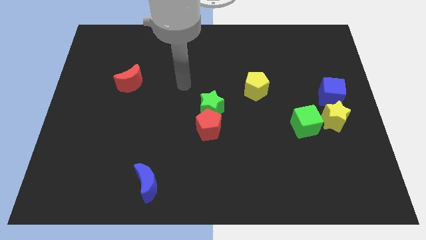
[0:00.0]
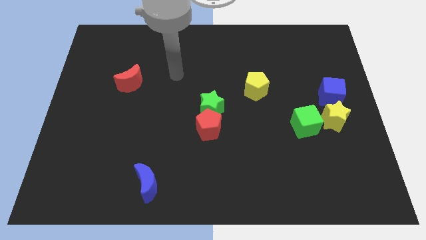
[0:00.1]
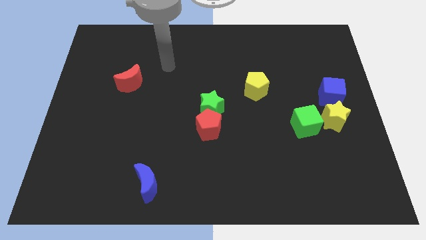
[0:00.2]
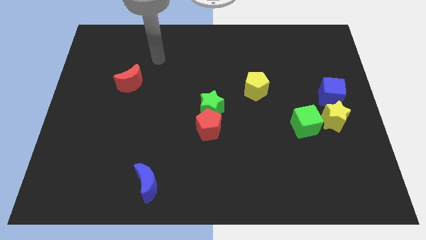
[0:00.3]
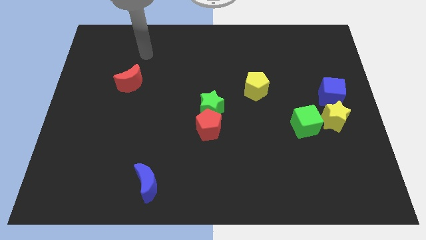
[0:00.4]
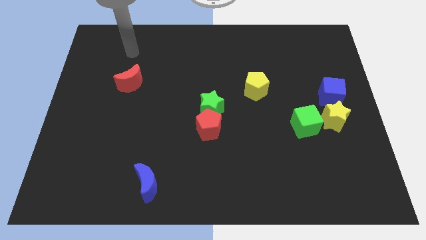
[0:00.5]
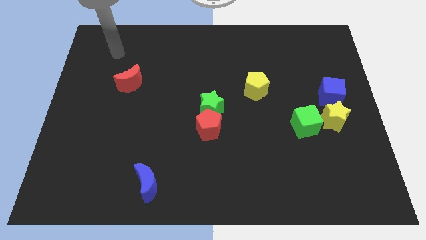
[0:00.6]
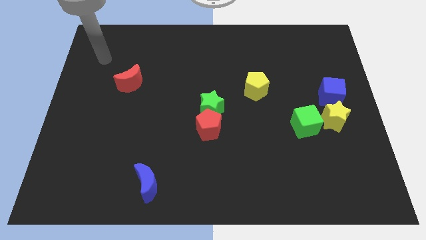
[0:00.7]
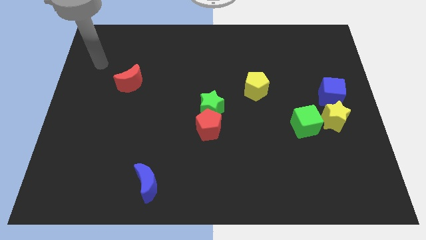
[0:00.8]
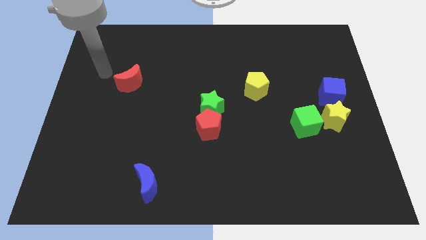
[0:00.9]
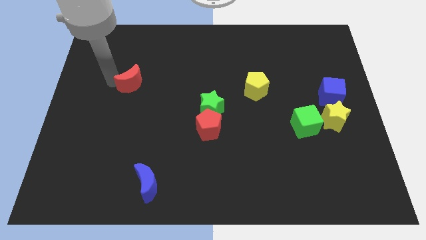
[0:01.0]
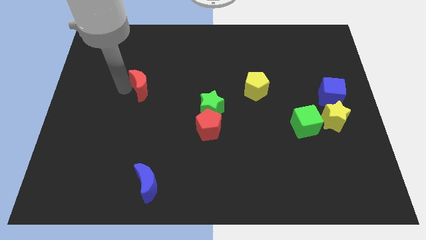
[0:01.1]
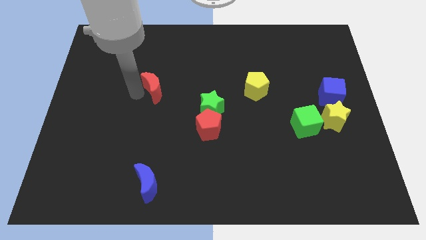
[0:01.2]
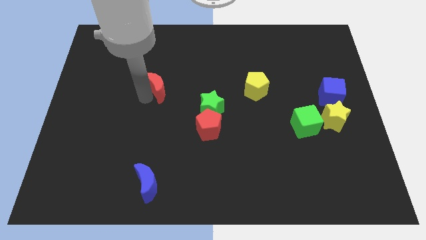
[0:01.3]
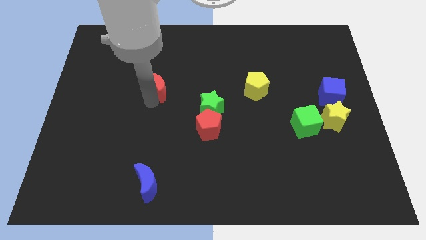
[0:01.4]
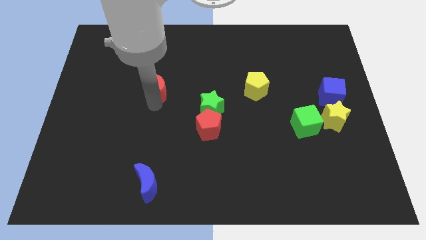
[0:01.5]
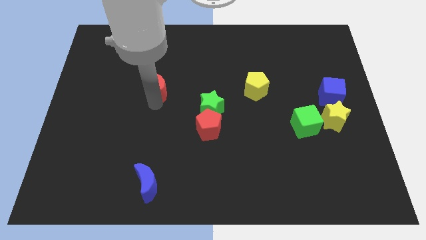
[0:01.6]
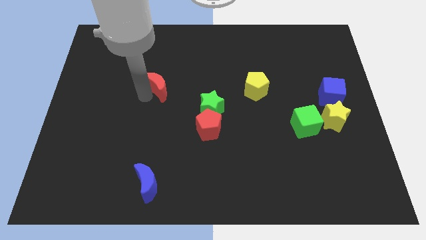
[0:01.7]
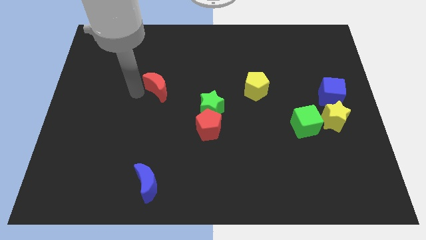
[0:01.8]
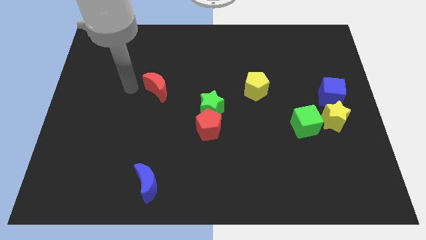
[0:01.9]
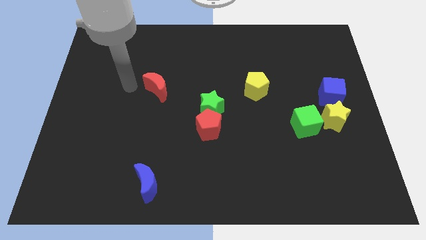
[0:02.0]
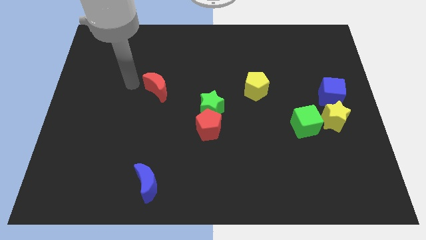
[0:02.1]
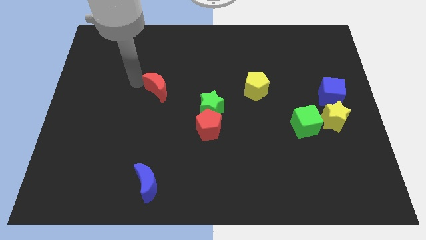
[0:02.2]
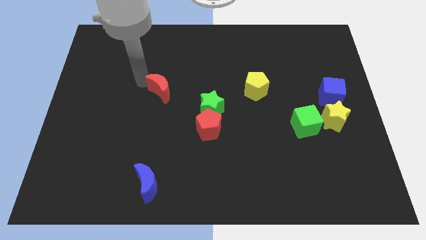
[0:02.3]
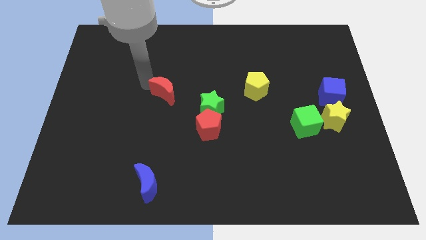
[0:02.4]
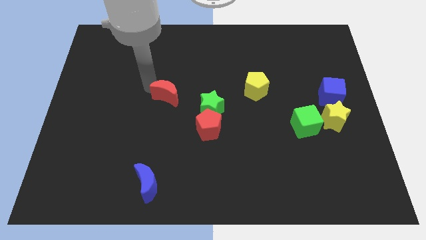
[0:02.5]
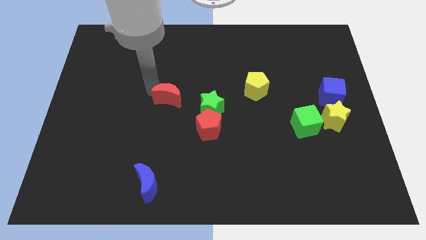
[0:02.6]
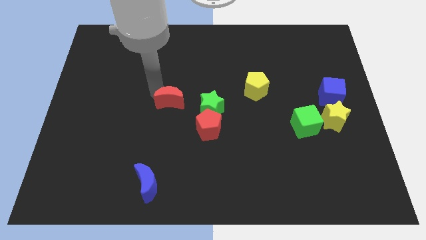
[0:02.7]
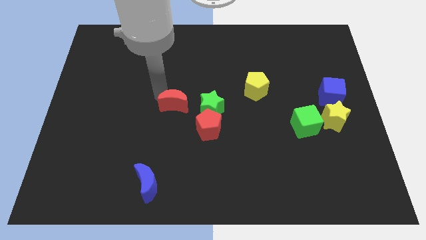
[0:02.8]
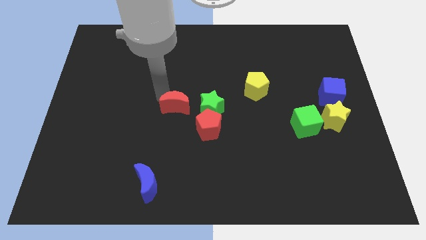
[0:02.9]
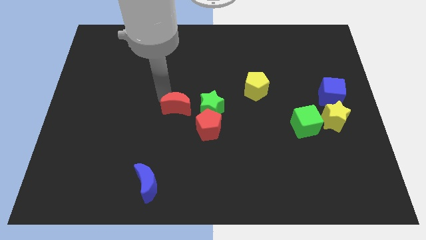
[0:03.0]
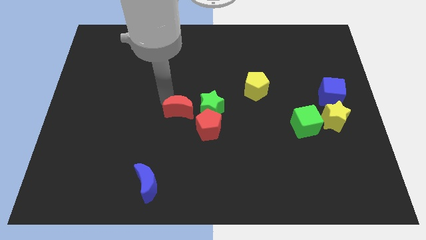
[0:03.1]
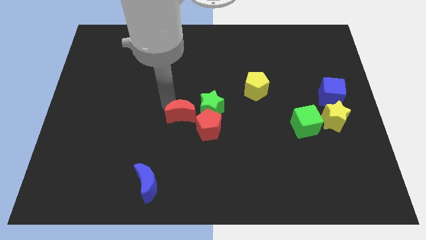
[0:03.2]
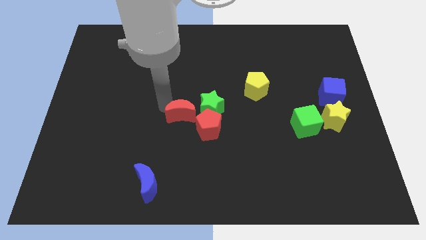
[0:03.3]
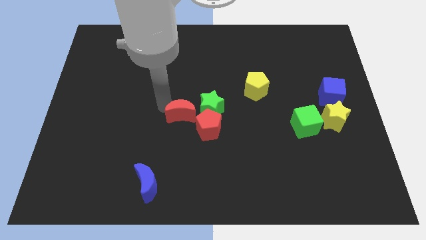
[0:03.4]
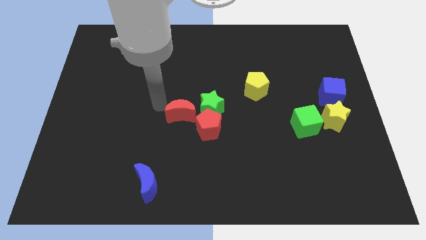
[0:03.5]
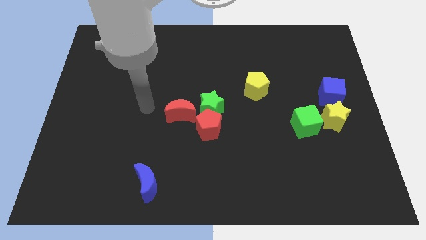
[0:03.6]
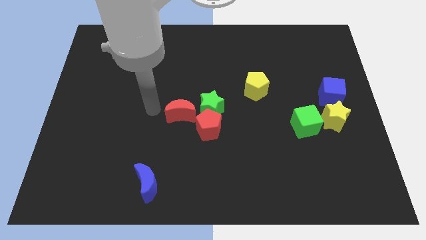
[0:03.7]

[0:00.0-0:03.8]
push the red crescent to the right of the green star

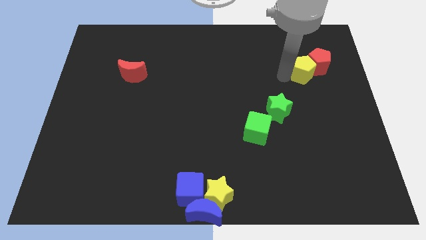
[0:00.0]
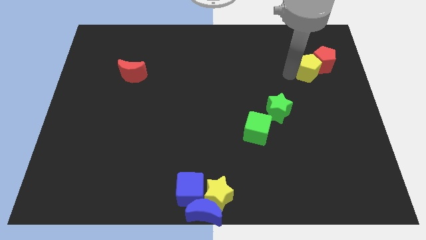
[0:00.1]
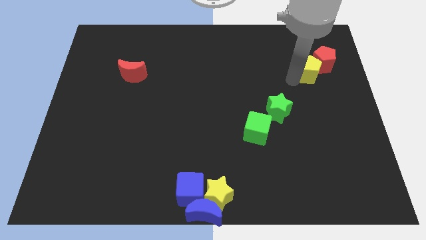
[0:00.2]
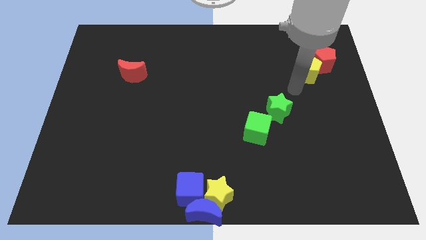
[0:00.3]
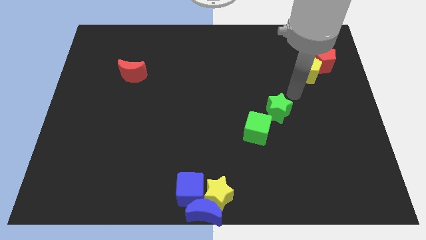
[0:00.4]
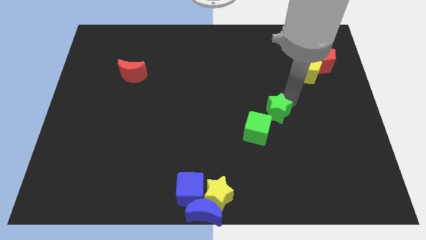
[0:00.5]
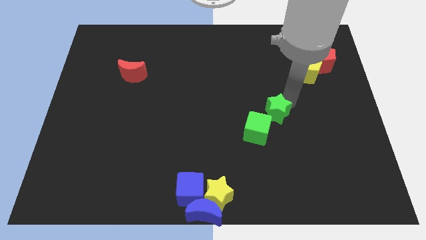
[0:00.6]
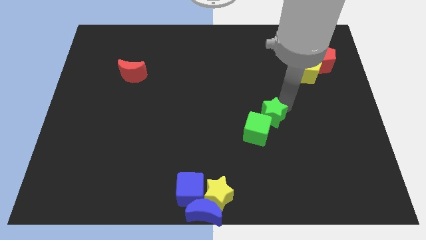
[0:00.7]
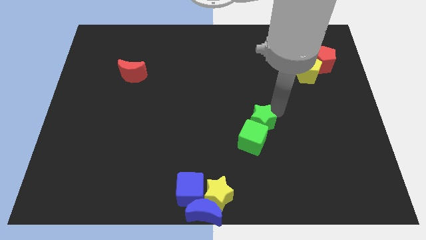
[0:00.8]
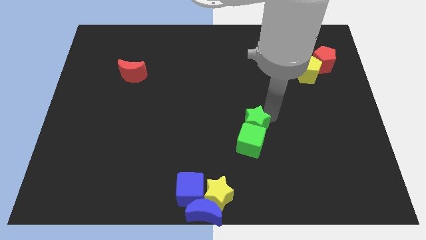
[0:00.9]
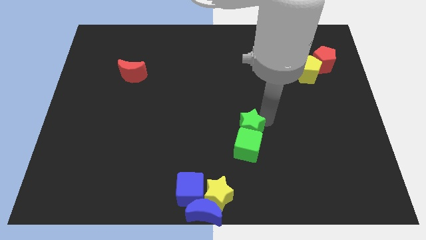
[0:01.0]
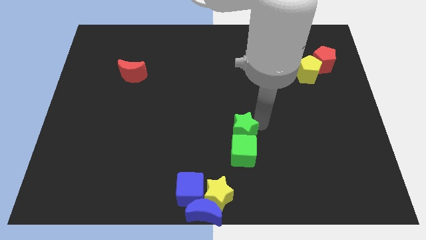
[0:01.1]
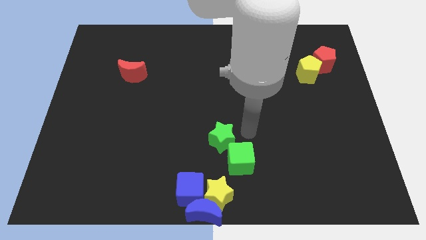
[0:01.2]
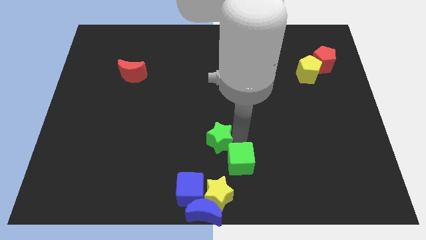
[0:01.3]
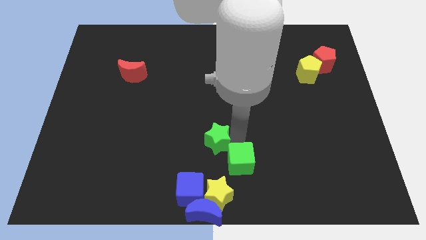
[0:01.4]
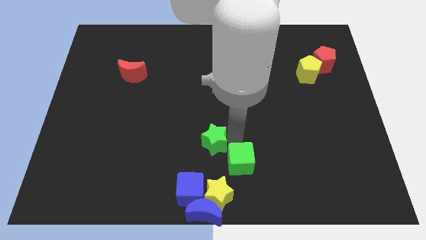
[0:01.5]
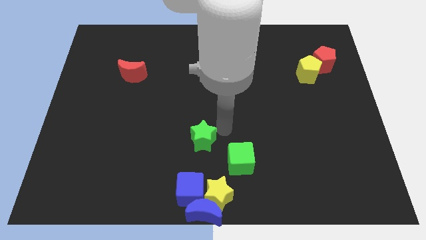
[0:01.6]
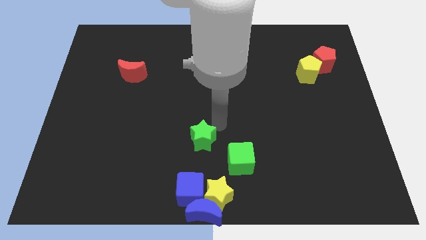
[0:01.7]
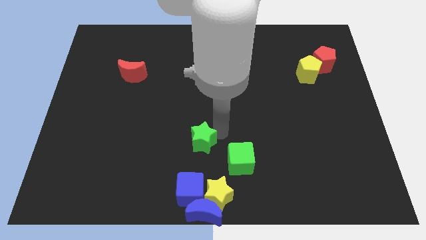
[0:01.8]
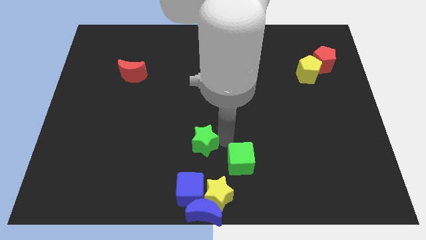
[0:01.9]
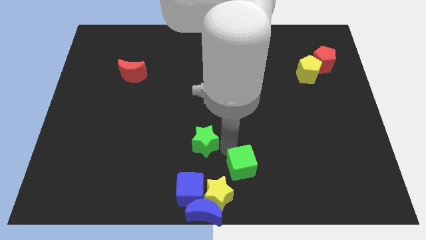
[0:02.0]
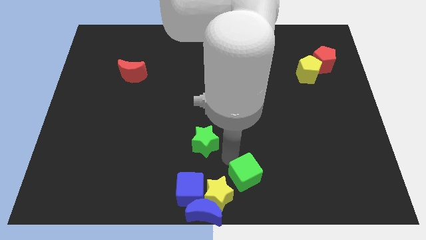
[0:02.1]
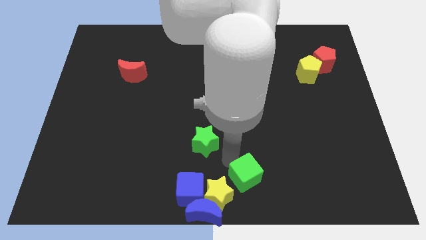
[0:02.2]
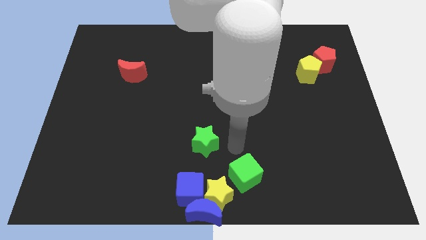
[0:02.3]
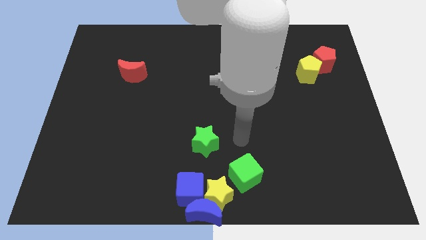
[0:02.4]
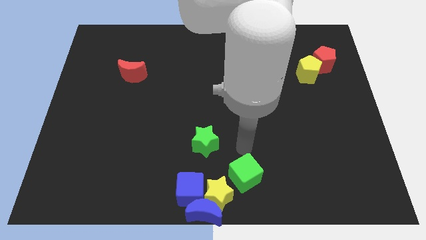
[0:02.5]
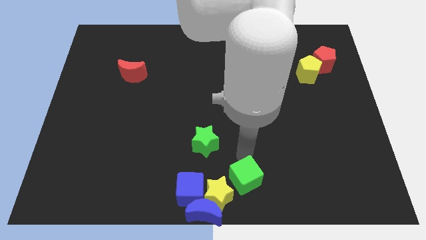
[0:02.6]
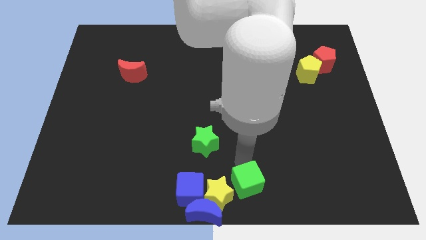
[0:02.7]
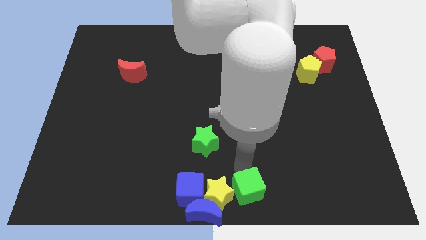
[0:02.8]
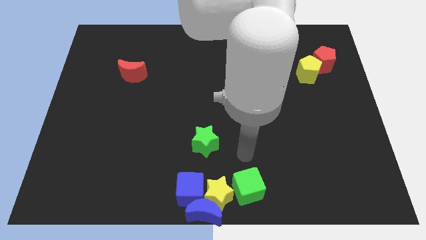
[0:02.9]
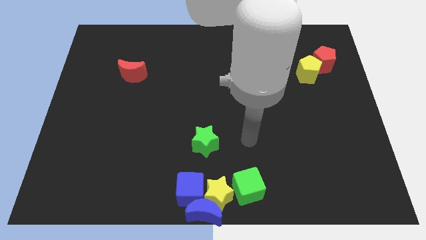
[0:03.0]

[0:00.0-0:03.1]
push the green cube at the right side of the yellow star

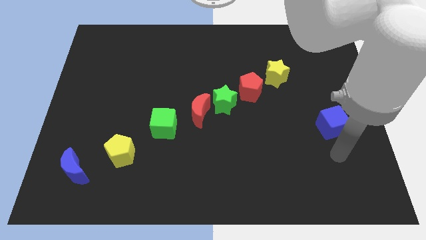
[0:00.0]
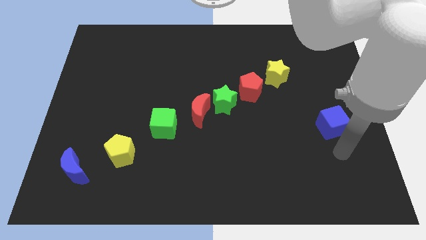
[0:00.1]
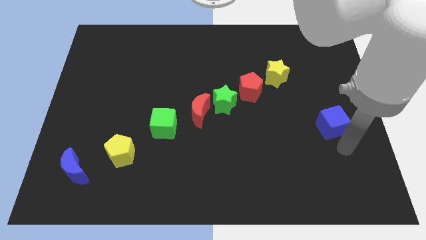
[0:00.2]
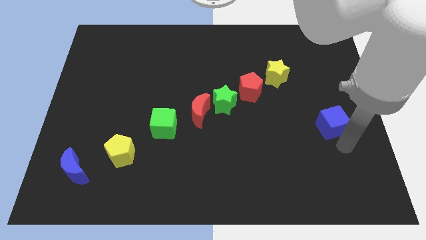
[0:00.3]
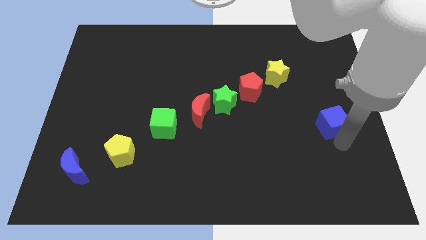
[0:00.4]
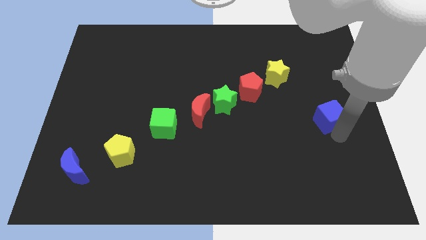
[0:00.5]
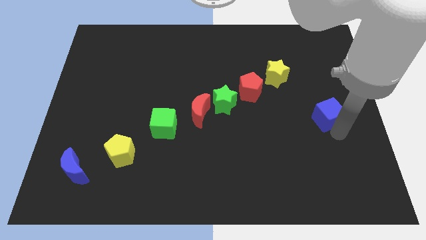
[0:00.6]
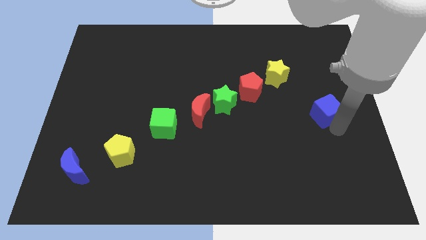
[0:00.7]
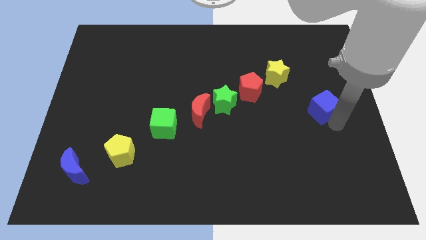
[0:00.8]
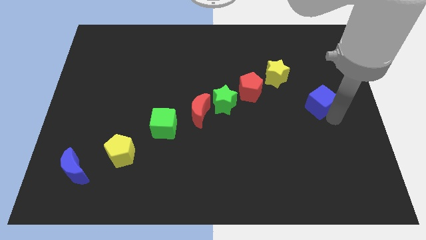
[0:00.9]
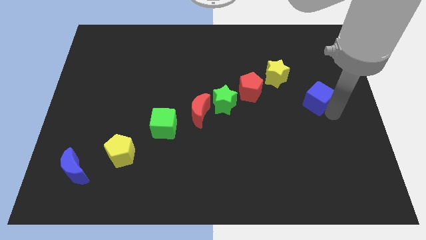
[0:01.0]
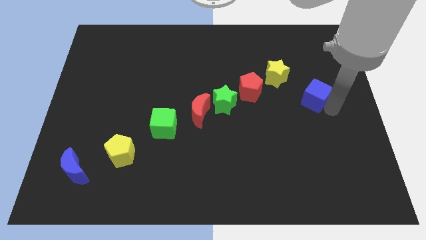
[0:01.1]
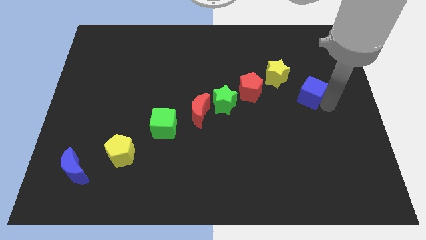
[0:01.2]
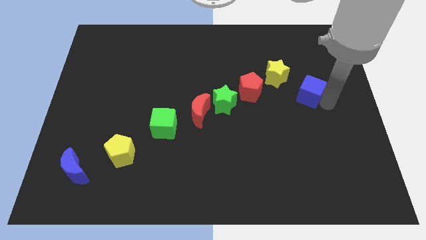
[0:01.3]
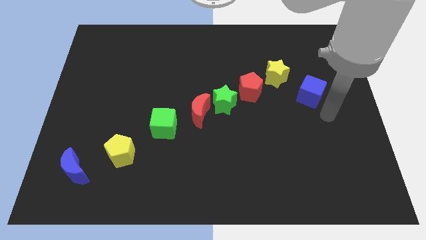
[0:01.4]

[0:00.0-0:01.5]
move the blue cube diagonally to the right of the yellow star

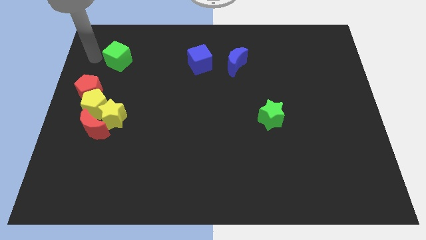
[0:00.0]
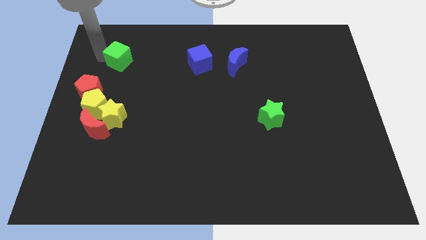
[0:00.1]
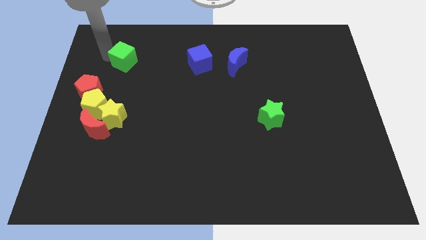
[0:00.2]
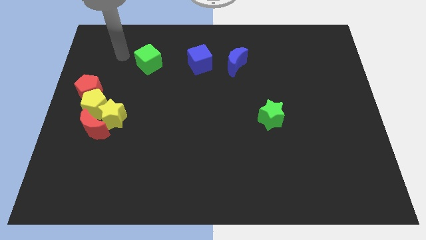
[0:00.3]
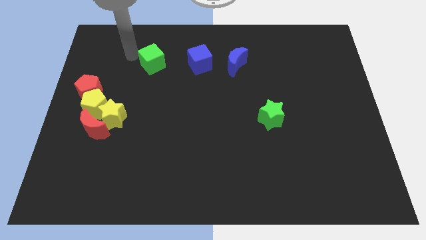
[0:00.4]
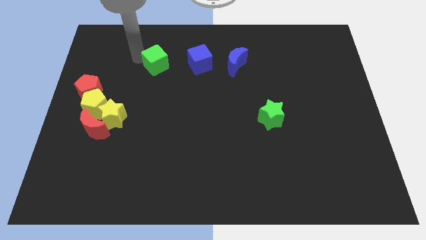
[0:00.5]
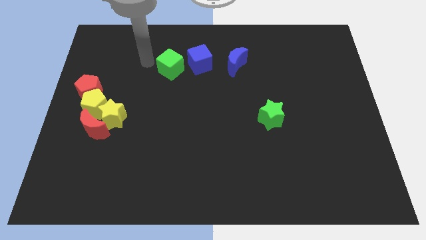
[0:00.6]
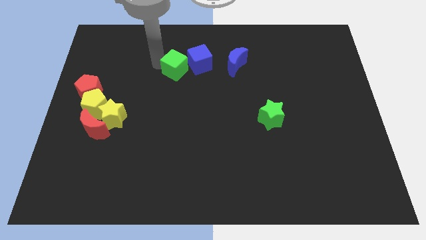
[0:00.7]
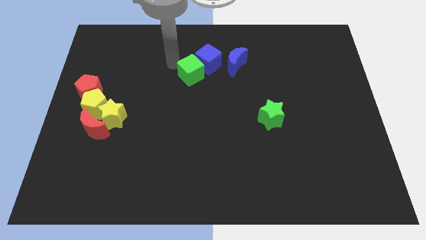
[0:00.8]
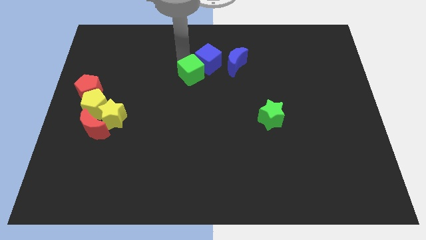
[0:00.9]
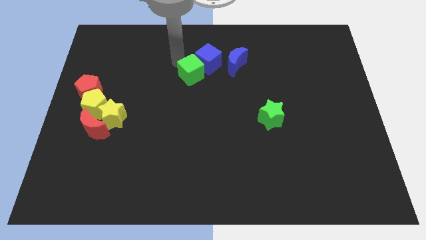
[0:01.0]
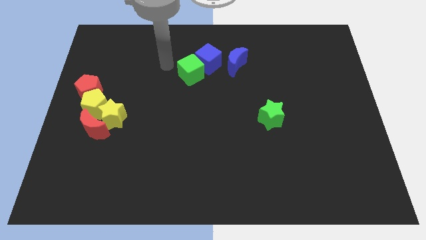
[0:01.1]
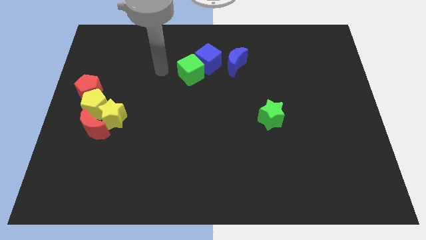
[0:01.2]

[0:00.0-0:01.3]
move the green cube into the blue cube
